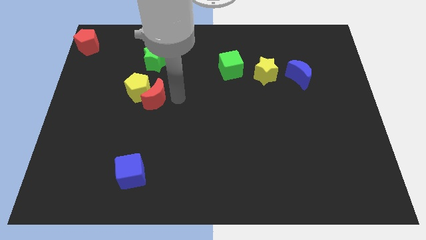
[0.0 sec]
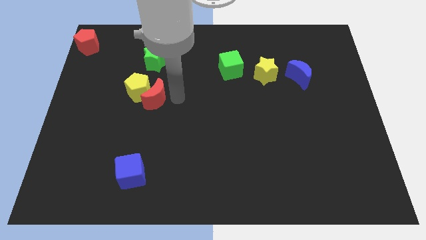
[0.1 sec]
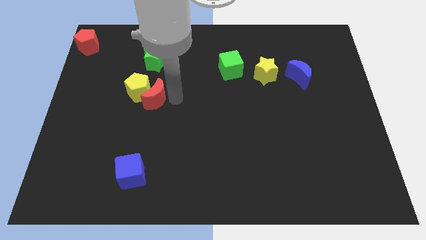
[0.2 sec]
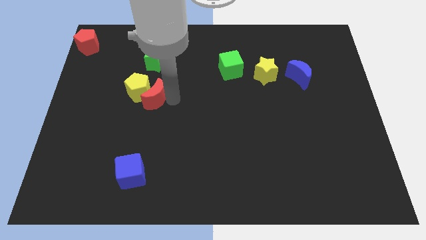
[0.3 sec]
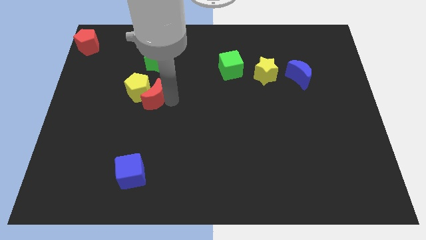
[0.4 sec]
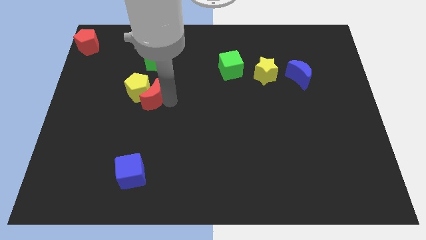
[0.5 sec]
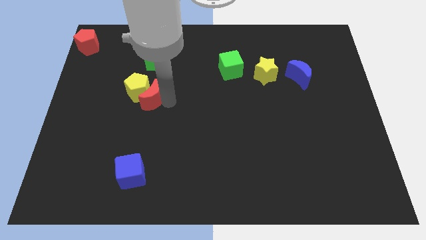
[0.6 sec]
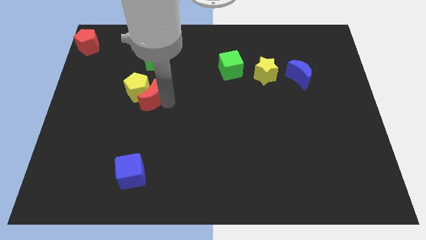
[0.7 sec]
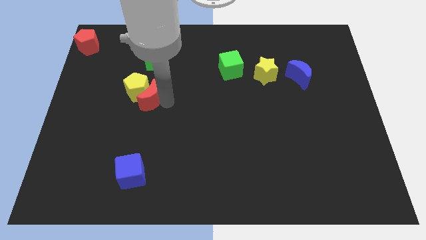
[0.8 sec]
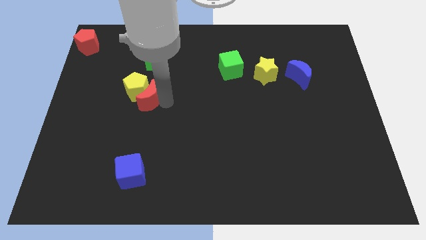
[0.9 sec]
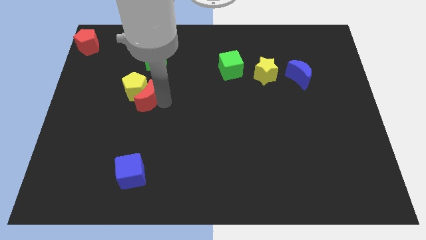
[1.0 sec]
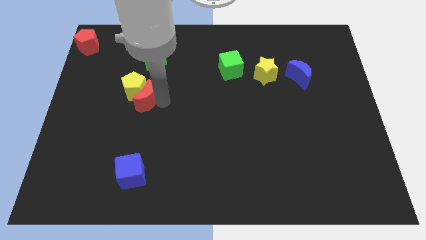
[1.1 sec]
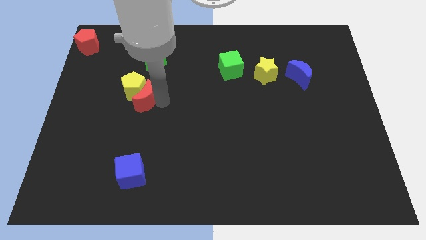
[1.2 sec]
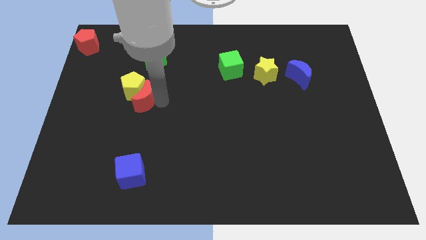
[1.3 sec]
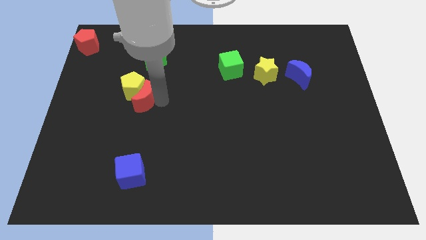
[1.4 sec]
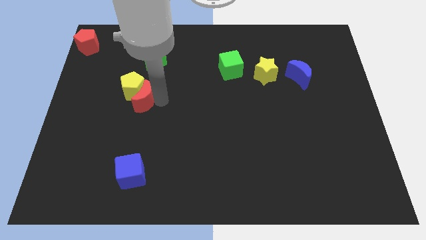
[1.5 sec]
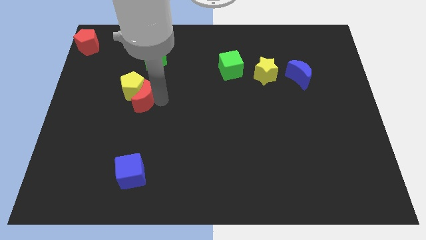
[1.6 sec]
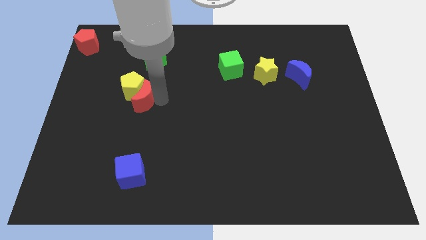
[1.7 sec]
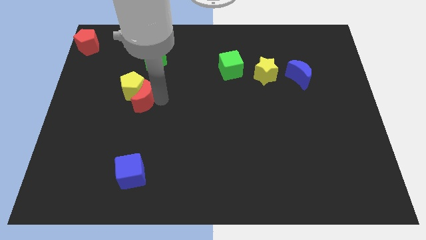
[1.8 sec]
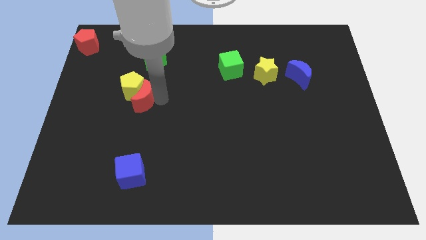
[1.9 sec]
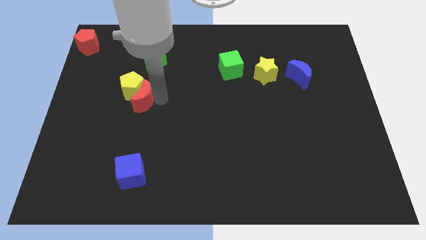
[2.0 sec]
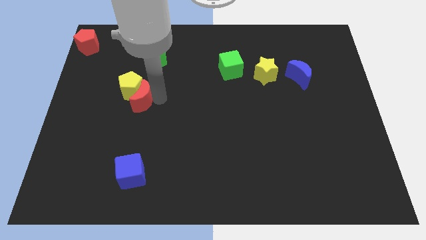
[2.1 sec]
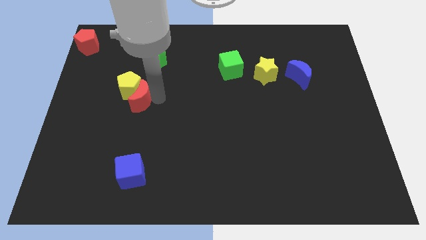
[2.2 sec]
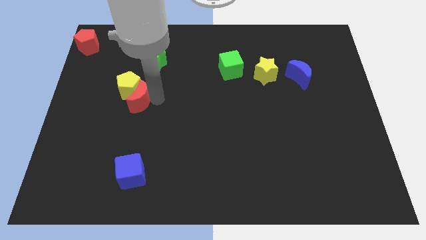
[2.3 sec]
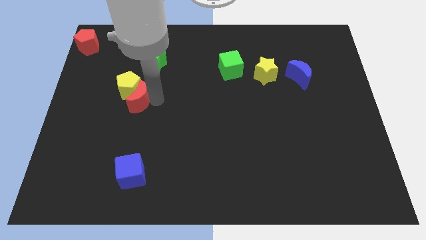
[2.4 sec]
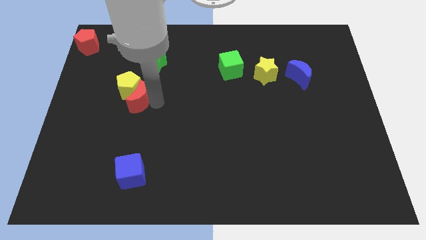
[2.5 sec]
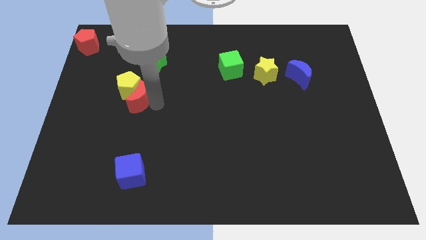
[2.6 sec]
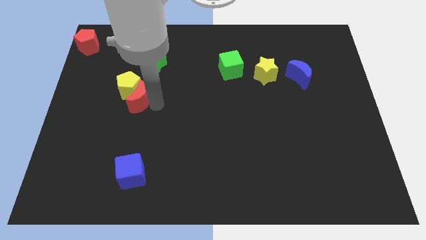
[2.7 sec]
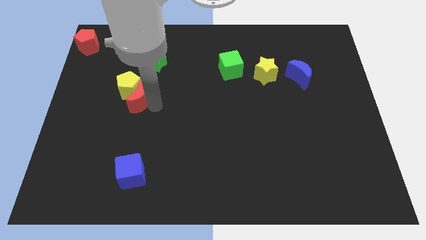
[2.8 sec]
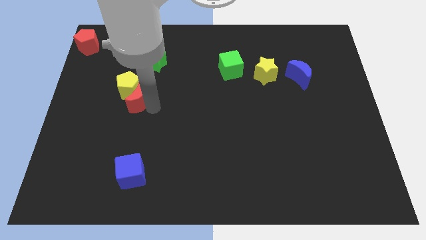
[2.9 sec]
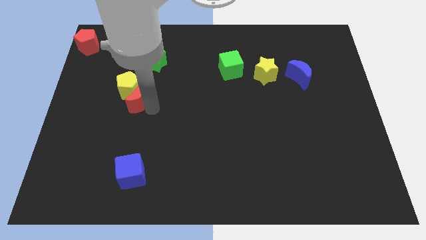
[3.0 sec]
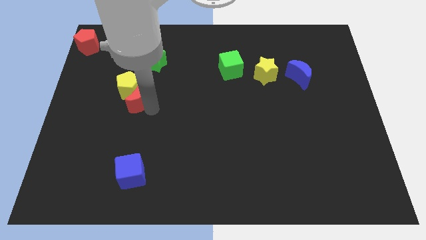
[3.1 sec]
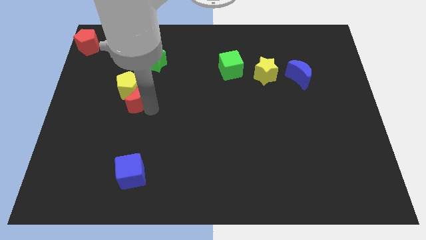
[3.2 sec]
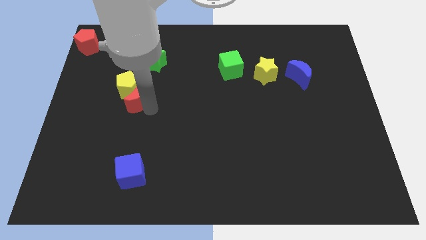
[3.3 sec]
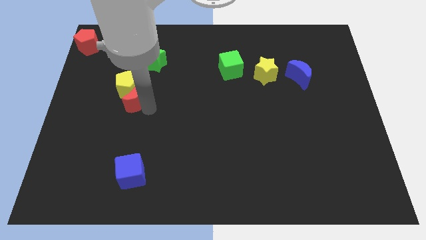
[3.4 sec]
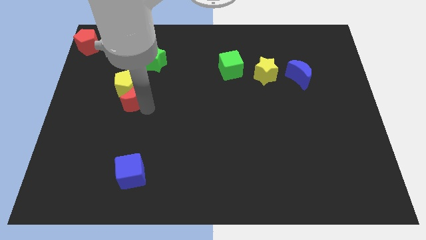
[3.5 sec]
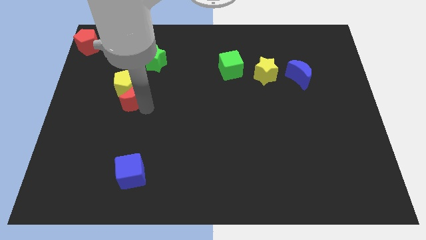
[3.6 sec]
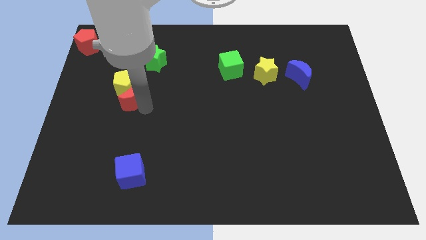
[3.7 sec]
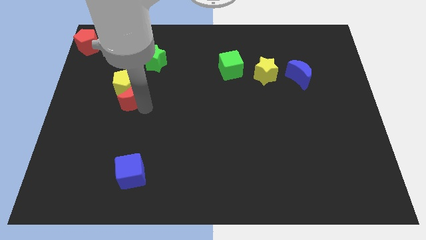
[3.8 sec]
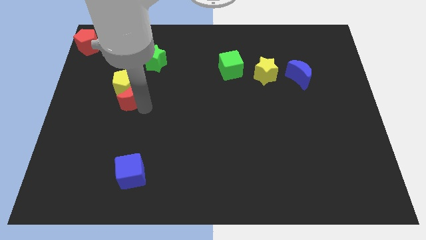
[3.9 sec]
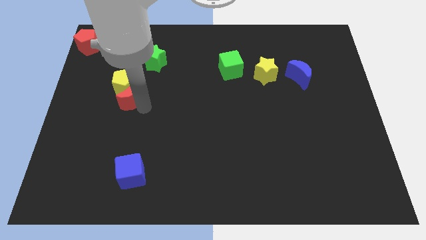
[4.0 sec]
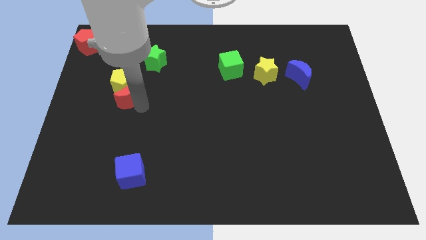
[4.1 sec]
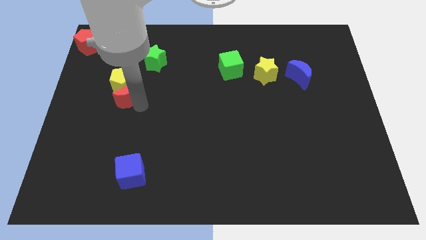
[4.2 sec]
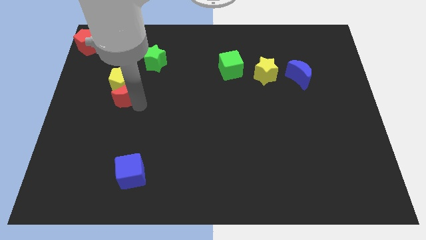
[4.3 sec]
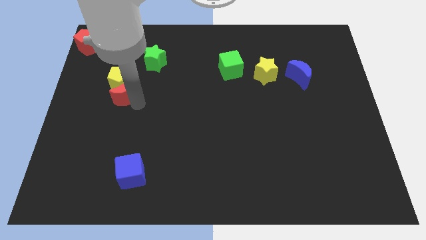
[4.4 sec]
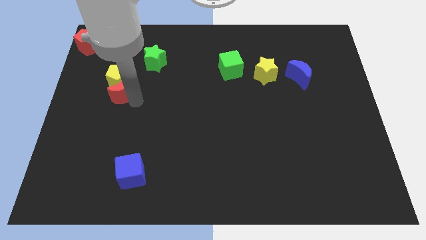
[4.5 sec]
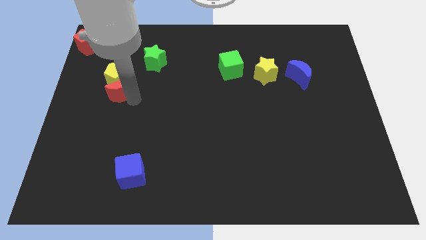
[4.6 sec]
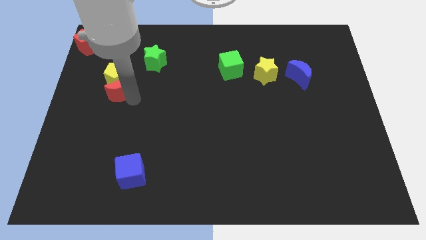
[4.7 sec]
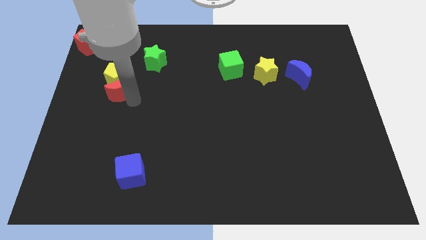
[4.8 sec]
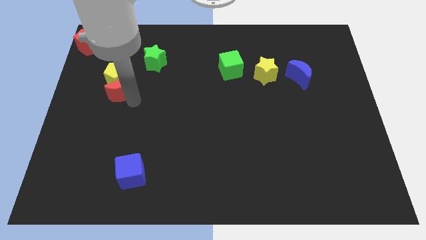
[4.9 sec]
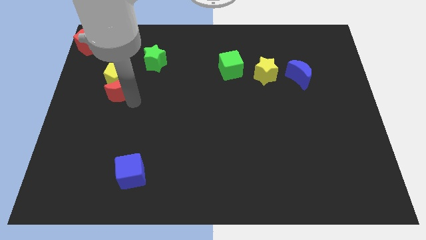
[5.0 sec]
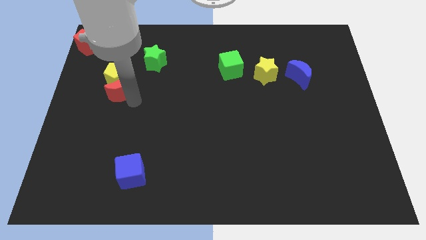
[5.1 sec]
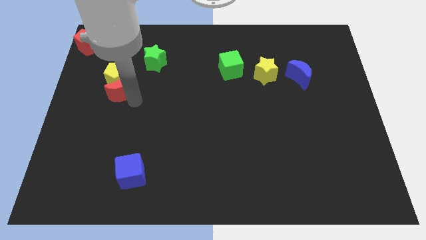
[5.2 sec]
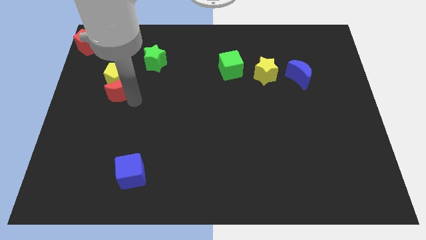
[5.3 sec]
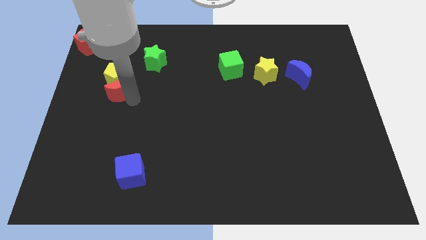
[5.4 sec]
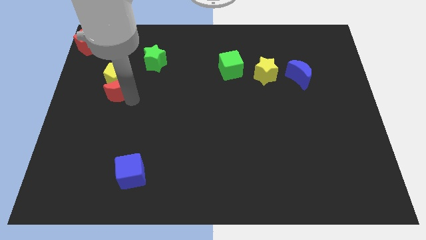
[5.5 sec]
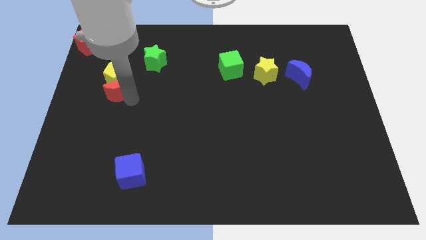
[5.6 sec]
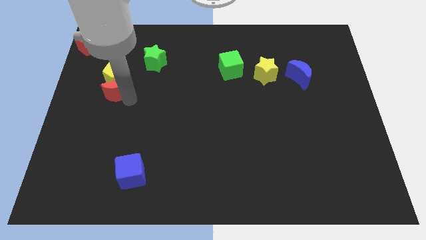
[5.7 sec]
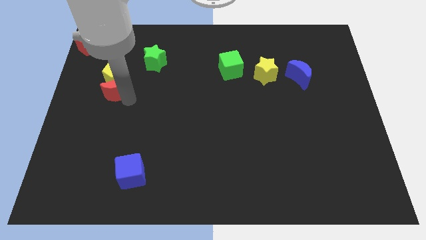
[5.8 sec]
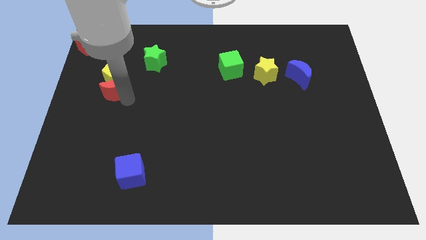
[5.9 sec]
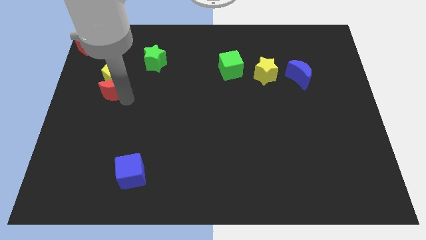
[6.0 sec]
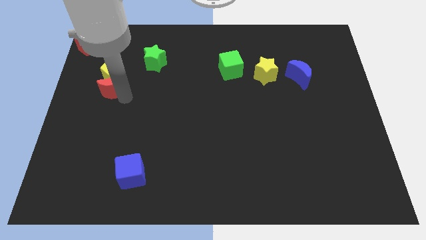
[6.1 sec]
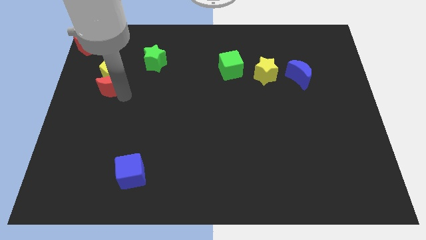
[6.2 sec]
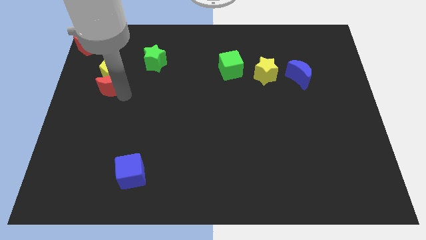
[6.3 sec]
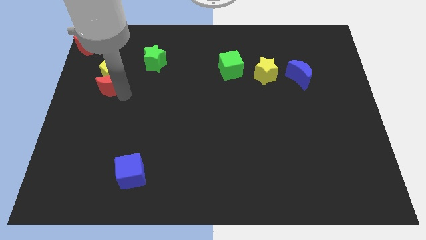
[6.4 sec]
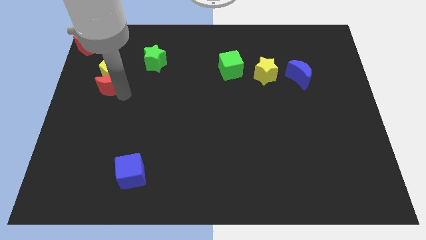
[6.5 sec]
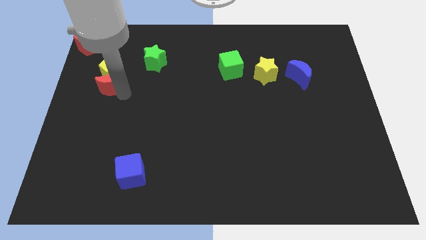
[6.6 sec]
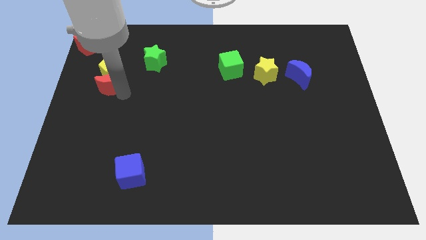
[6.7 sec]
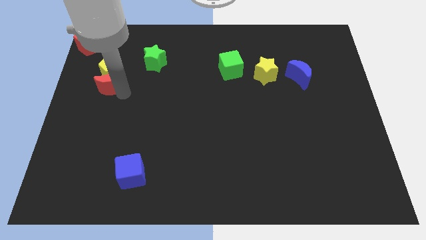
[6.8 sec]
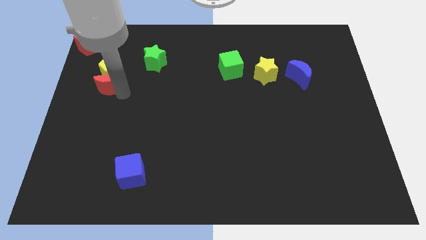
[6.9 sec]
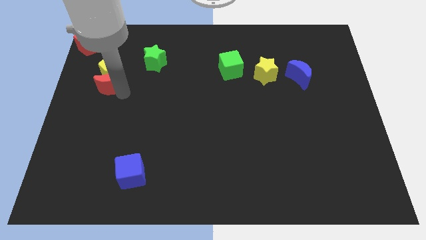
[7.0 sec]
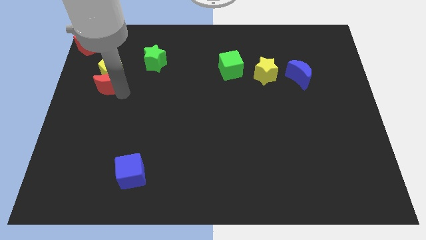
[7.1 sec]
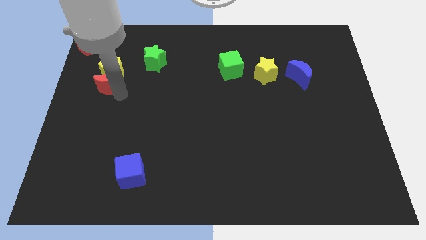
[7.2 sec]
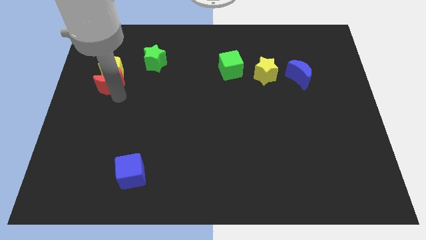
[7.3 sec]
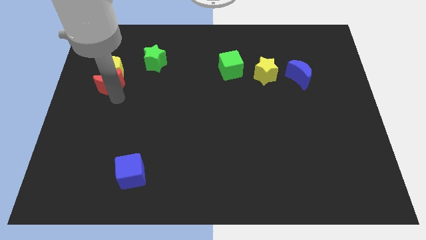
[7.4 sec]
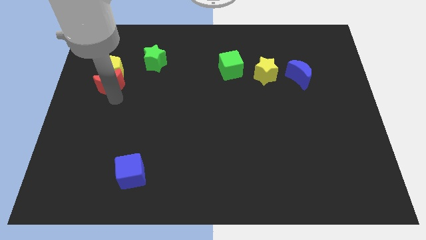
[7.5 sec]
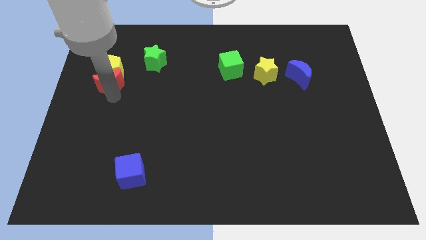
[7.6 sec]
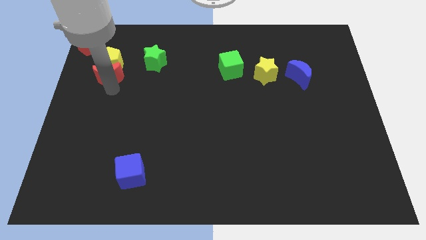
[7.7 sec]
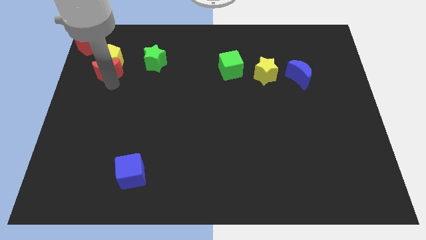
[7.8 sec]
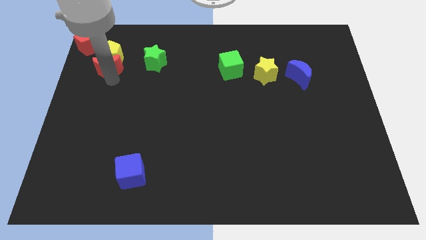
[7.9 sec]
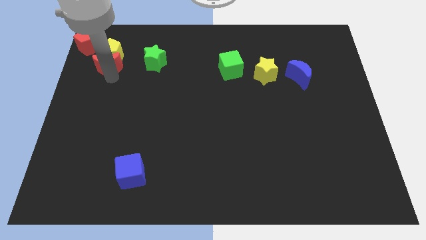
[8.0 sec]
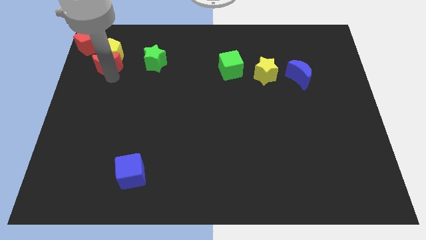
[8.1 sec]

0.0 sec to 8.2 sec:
move the yellow pentagon and the red crescent towards top left corner

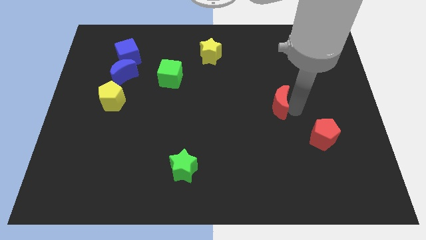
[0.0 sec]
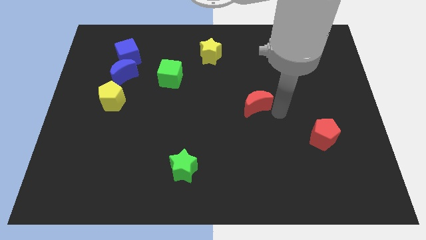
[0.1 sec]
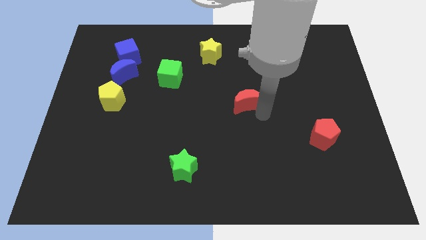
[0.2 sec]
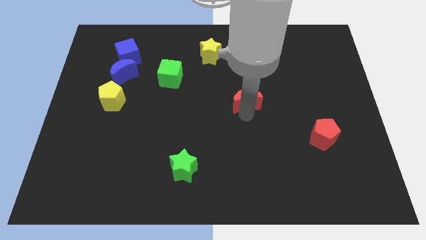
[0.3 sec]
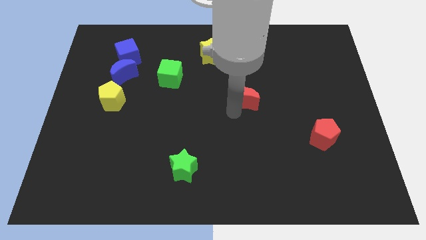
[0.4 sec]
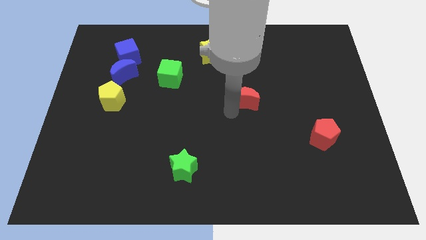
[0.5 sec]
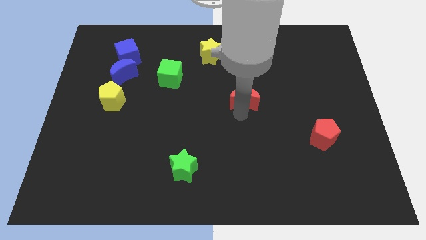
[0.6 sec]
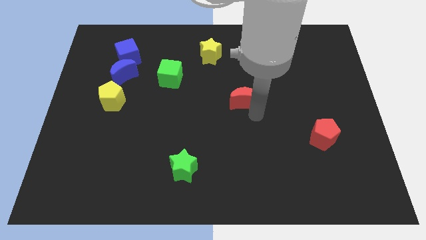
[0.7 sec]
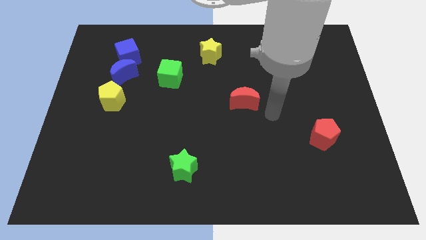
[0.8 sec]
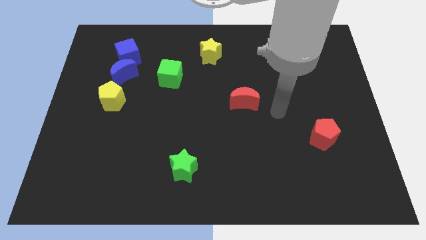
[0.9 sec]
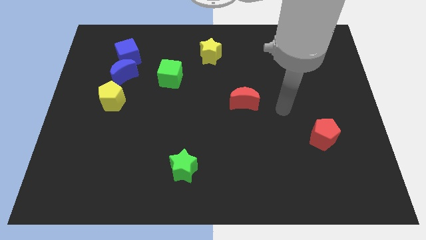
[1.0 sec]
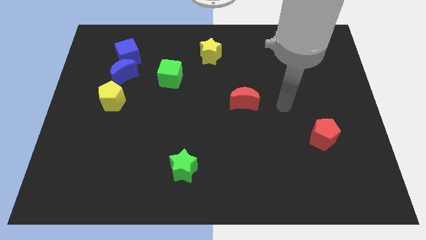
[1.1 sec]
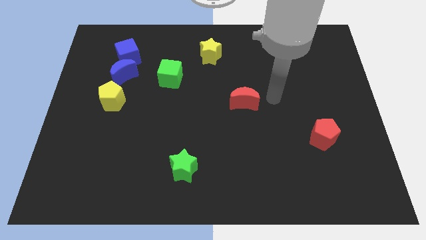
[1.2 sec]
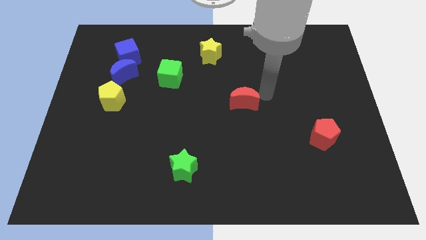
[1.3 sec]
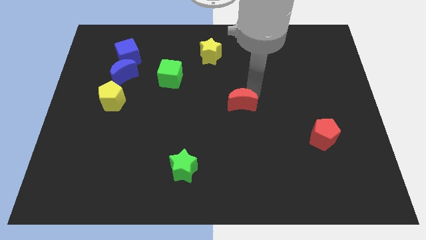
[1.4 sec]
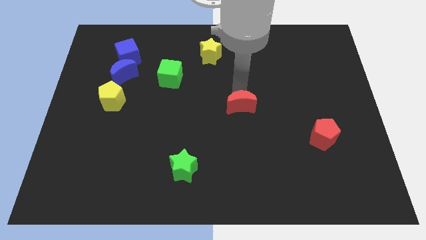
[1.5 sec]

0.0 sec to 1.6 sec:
push the red moon slightly to the left side of the board
